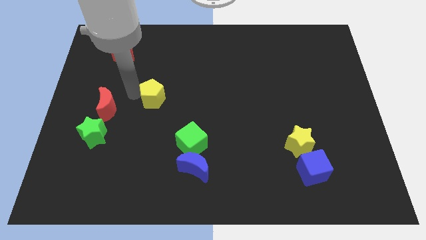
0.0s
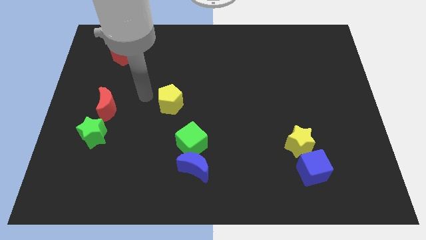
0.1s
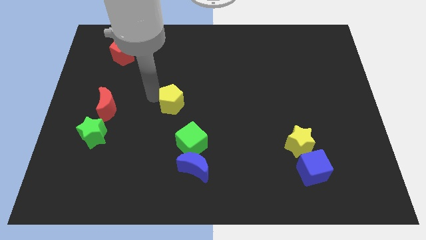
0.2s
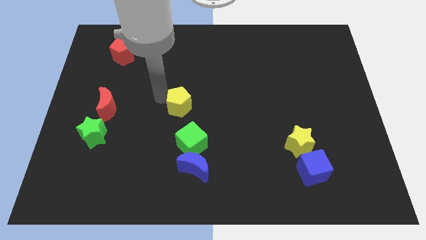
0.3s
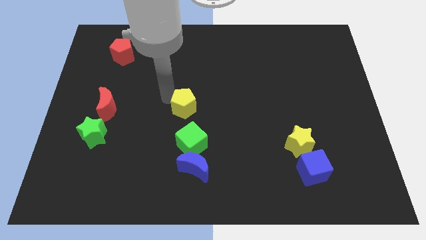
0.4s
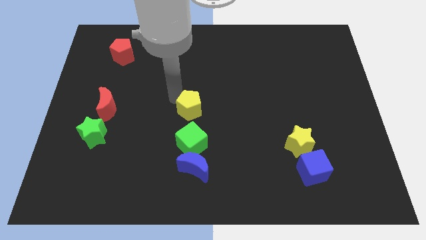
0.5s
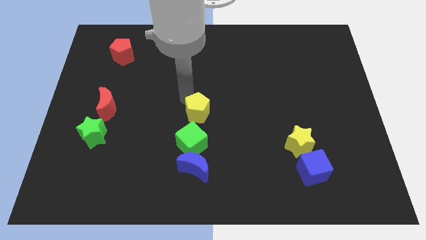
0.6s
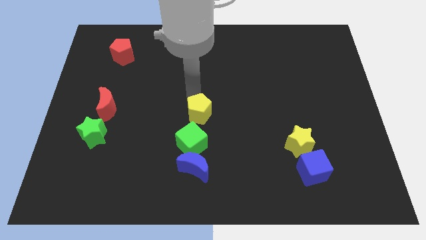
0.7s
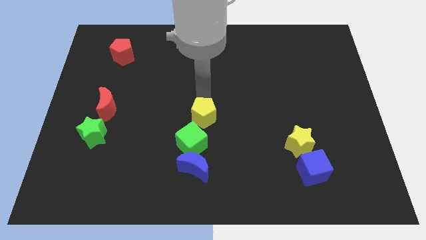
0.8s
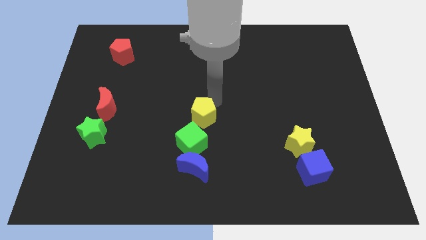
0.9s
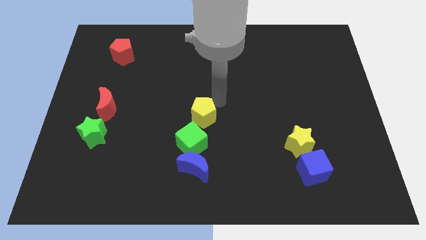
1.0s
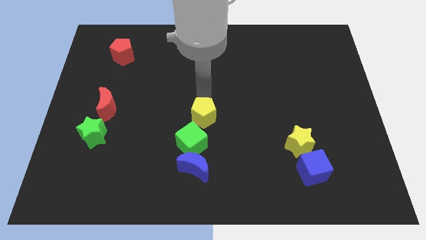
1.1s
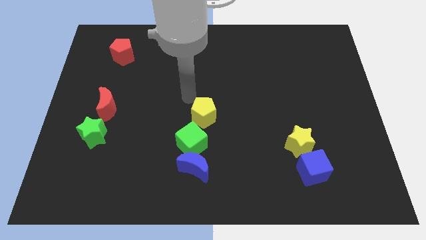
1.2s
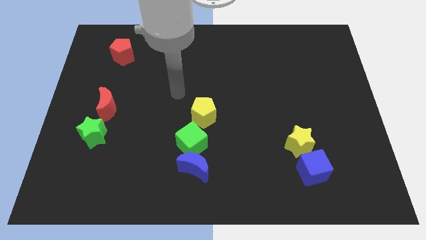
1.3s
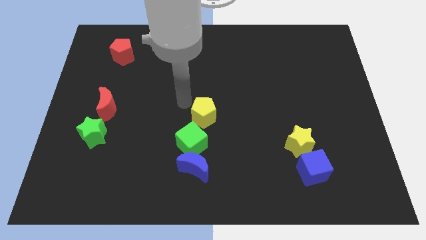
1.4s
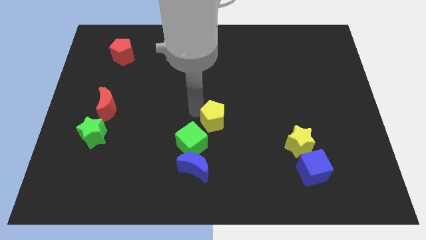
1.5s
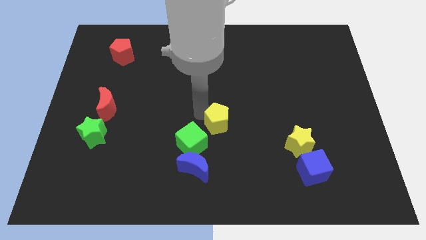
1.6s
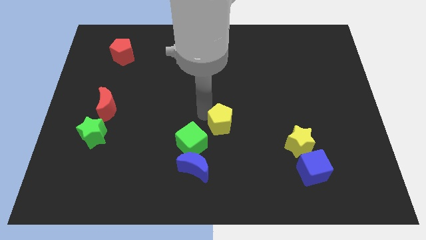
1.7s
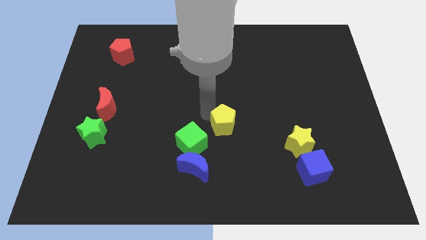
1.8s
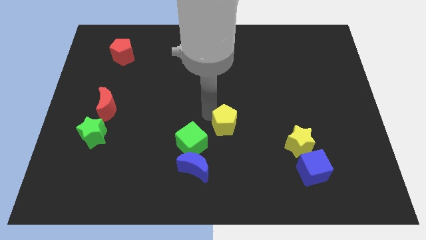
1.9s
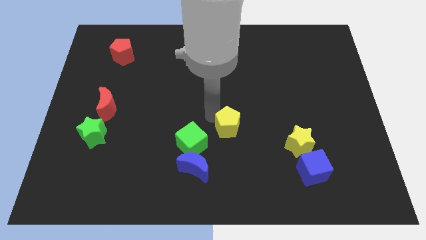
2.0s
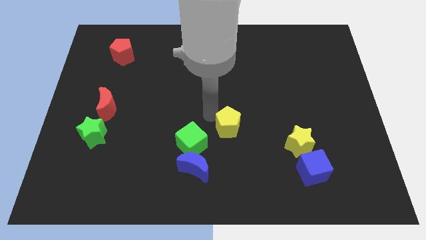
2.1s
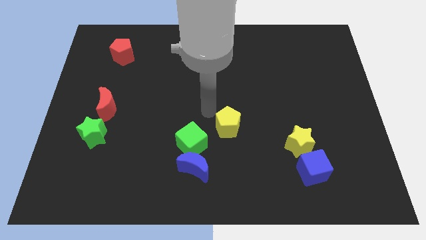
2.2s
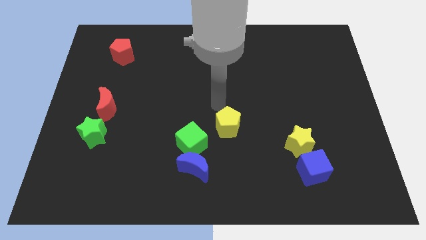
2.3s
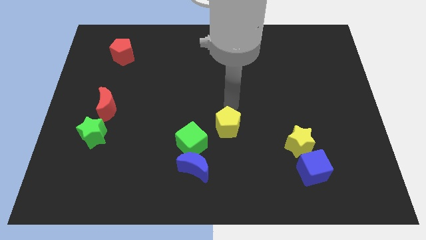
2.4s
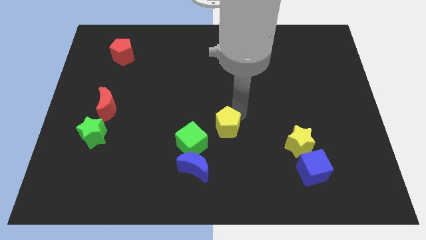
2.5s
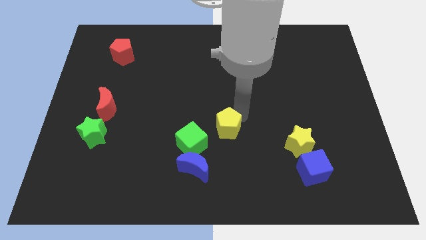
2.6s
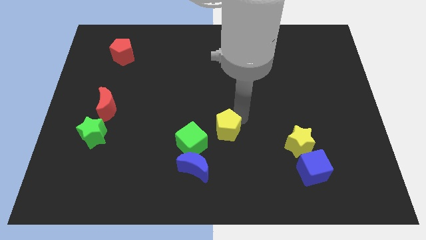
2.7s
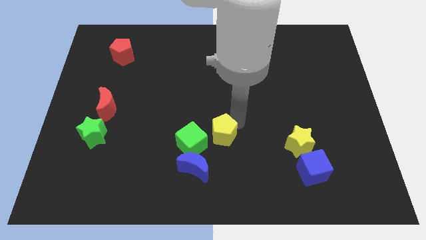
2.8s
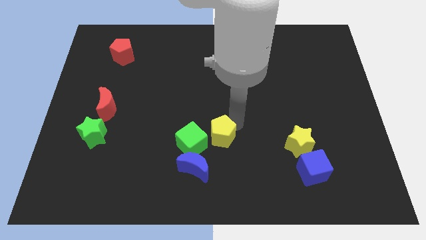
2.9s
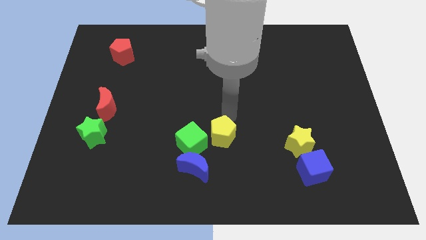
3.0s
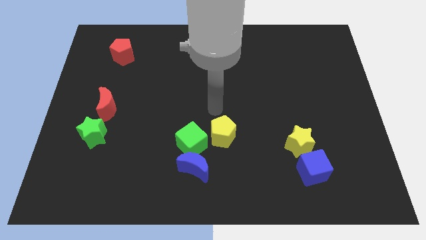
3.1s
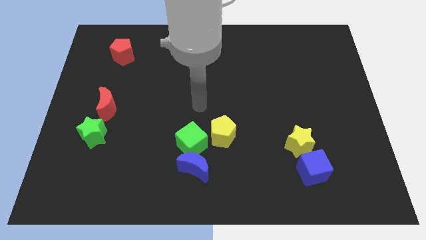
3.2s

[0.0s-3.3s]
place the yellow pentagon to the diagonal right of green cube

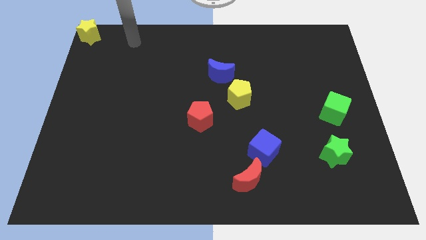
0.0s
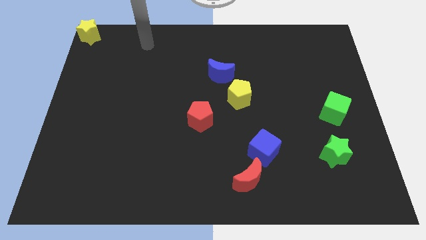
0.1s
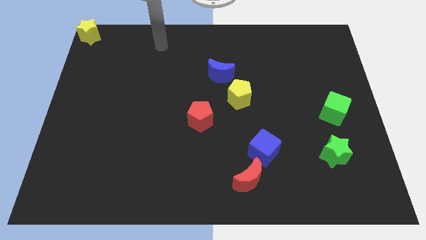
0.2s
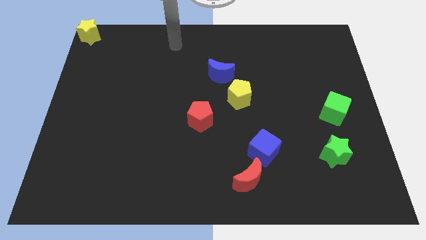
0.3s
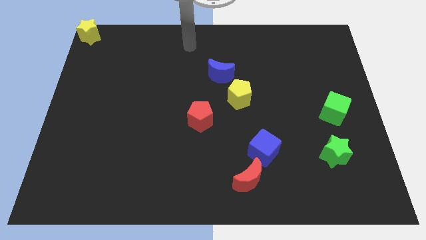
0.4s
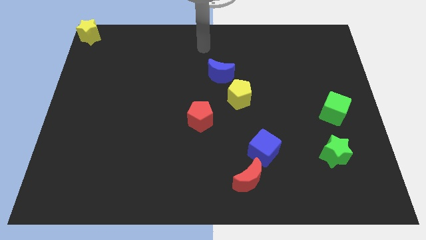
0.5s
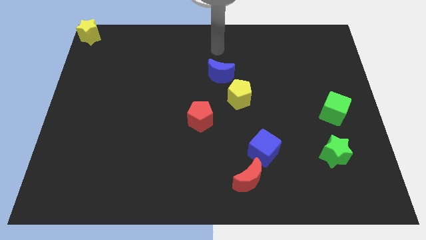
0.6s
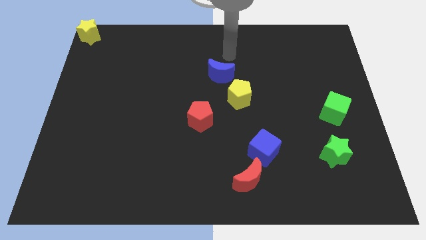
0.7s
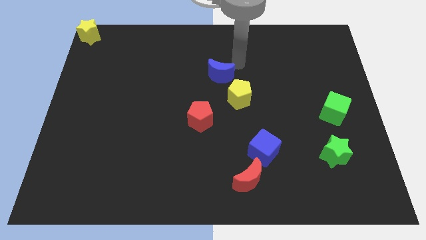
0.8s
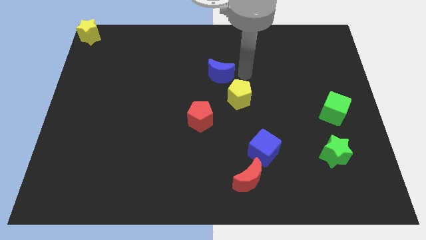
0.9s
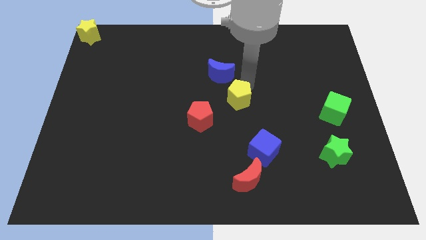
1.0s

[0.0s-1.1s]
place the arm above the yellow pentagon

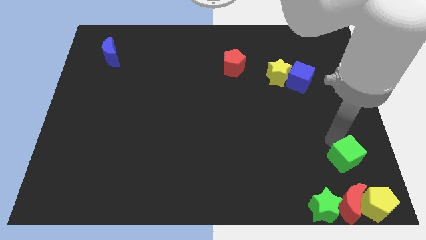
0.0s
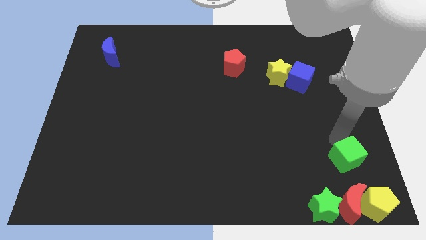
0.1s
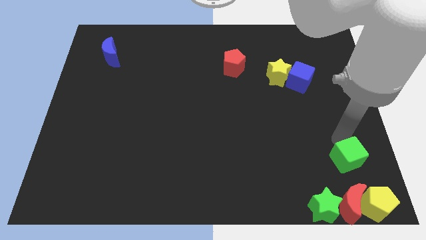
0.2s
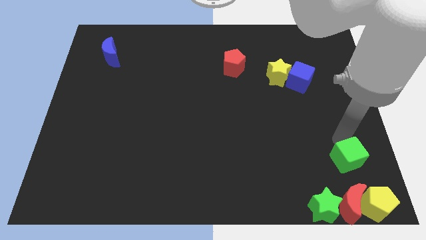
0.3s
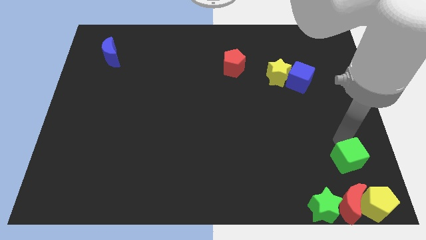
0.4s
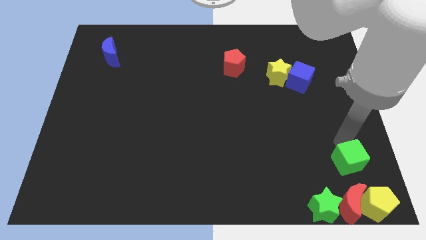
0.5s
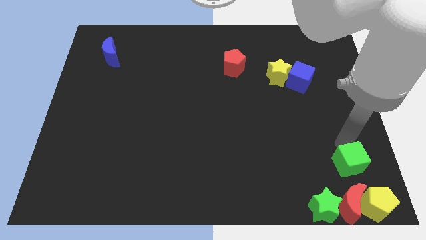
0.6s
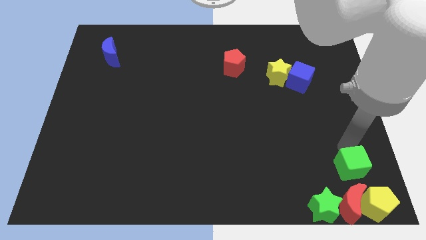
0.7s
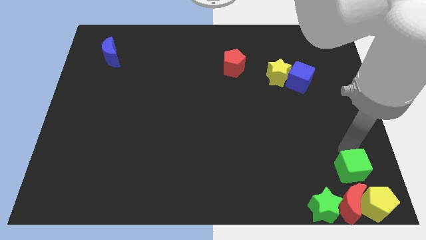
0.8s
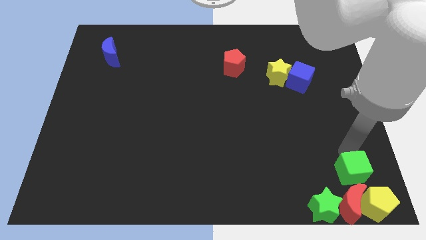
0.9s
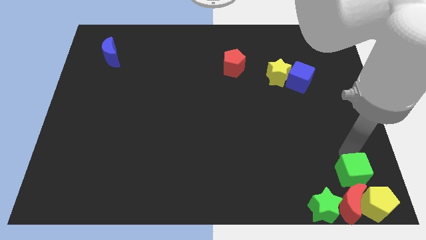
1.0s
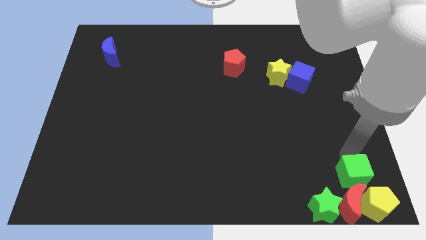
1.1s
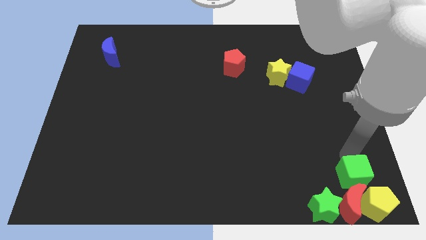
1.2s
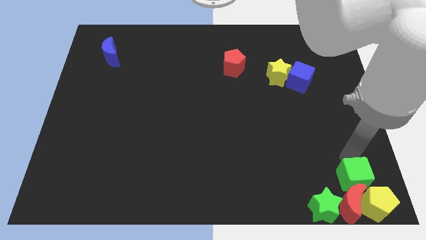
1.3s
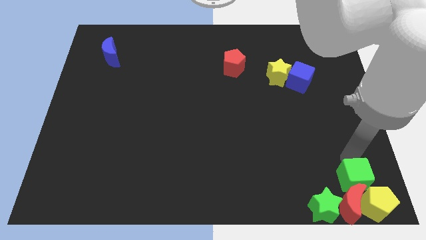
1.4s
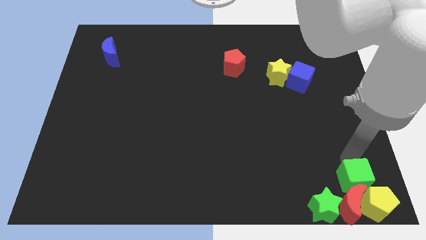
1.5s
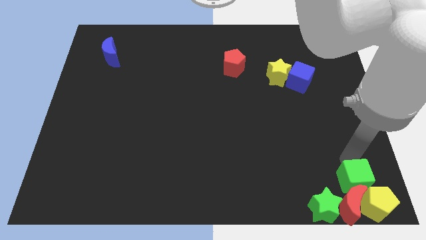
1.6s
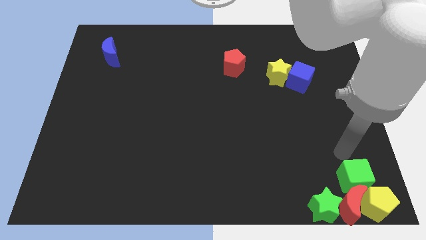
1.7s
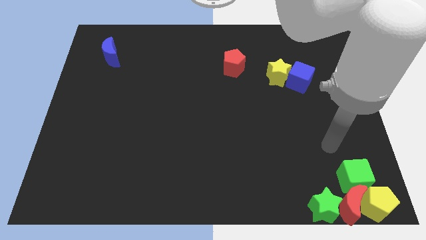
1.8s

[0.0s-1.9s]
place the green cube above the red crescent

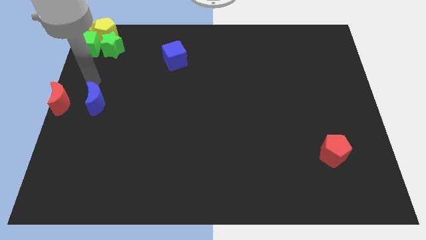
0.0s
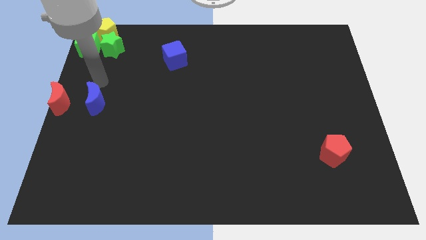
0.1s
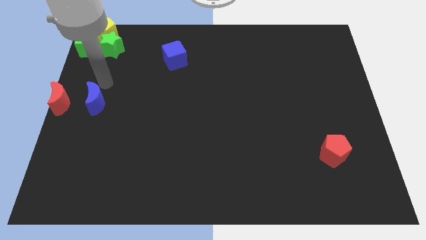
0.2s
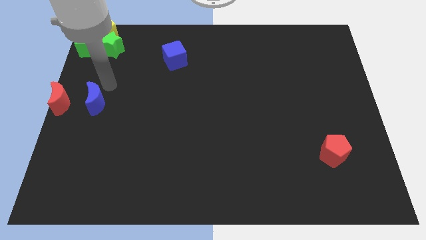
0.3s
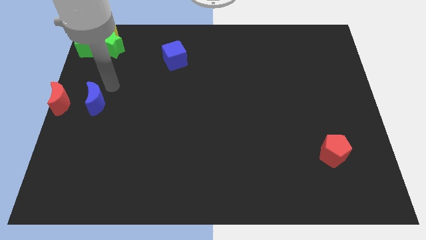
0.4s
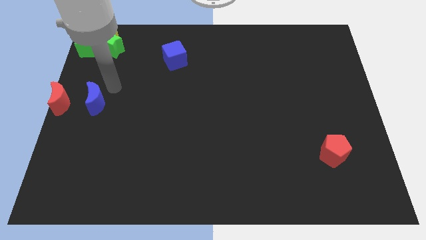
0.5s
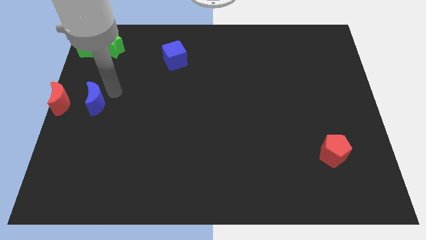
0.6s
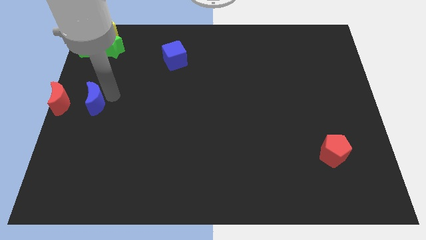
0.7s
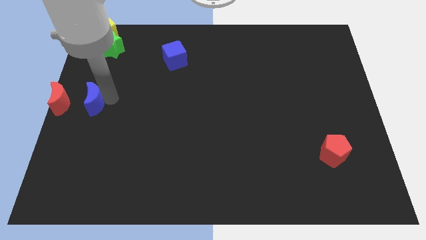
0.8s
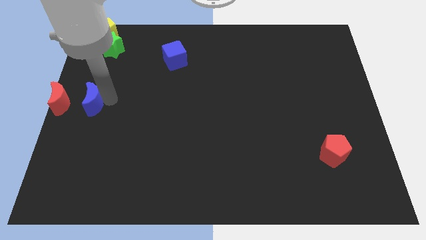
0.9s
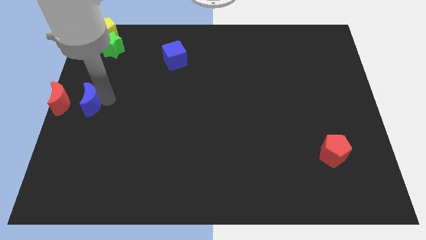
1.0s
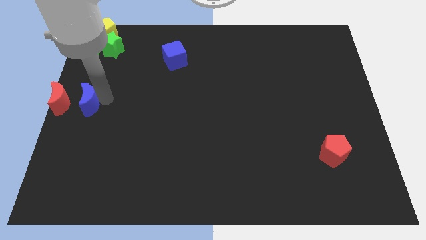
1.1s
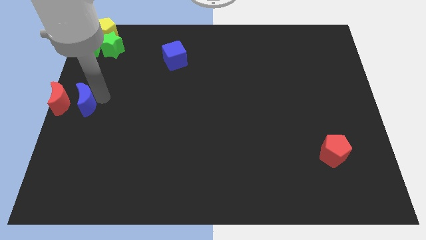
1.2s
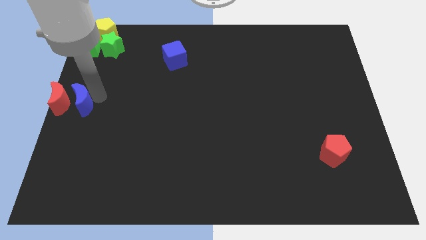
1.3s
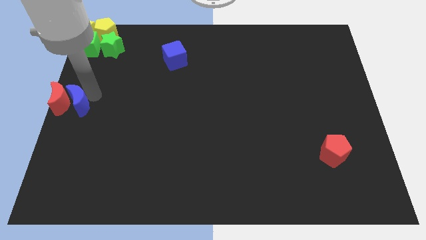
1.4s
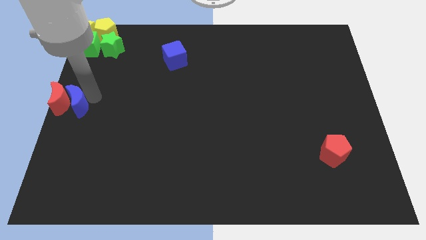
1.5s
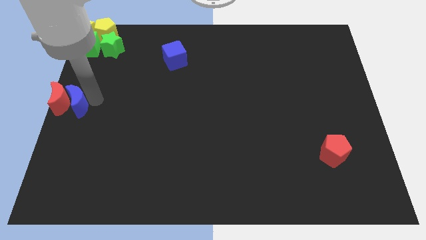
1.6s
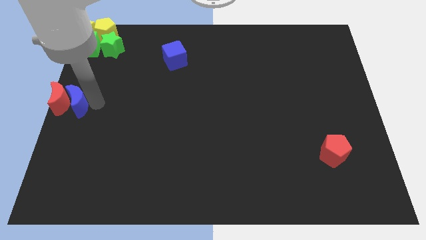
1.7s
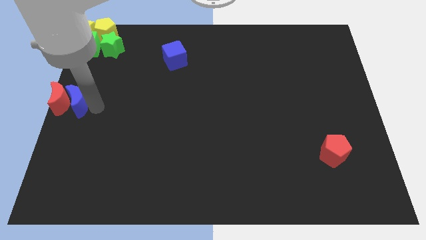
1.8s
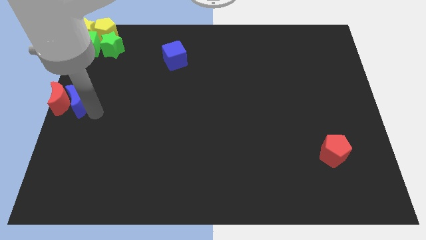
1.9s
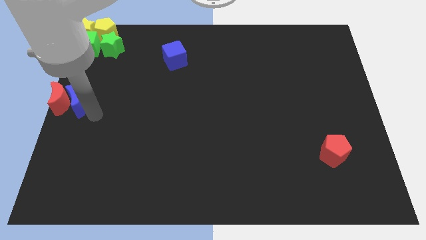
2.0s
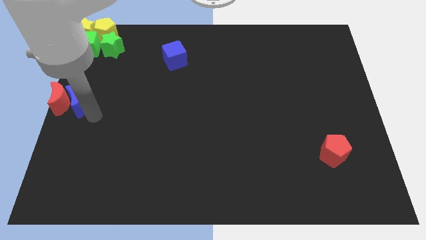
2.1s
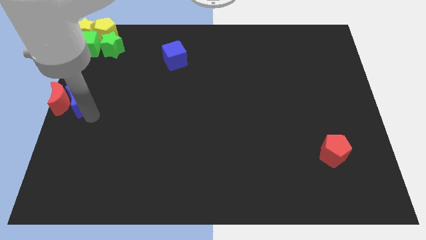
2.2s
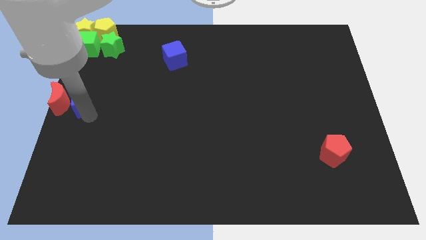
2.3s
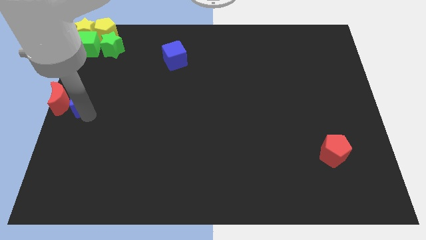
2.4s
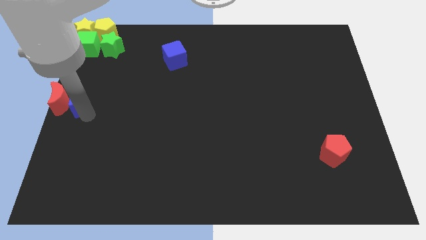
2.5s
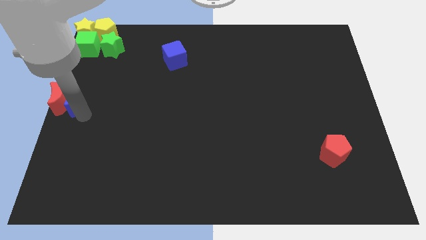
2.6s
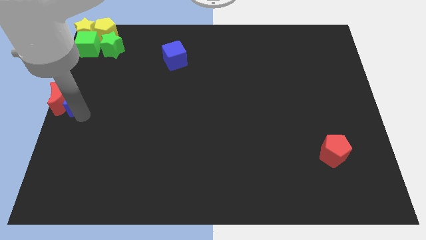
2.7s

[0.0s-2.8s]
place the blue moon right to the red moon
